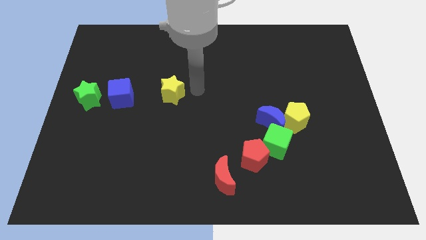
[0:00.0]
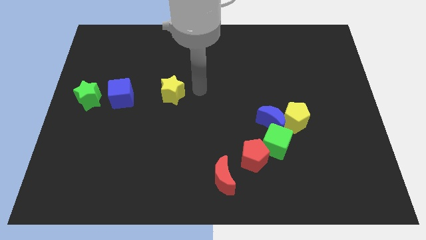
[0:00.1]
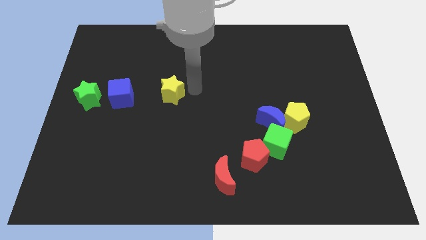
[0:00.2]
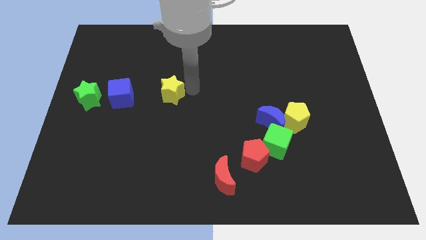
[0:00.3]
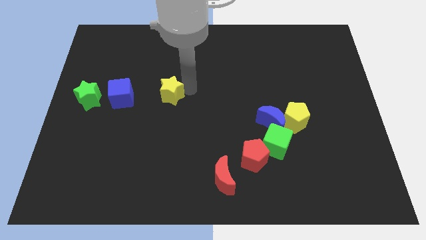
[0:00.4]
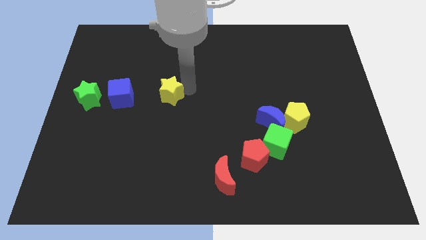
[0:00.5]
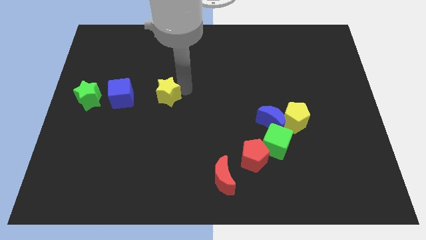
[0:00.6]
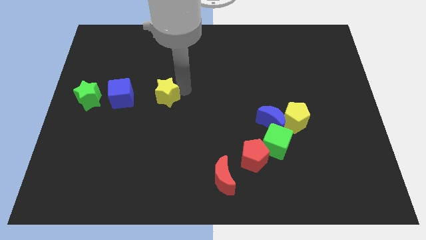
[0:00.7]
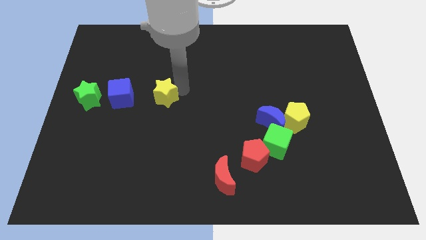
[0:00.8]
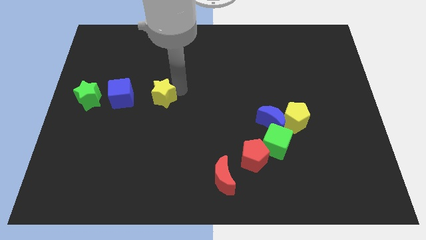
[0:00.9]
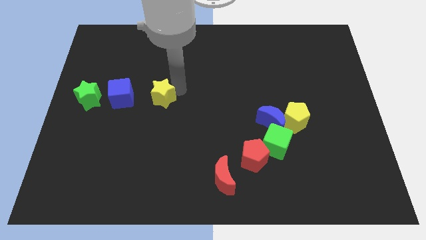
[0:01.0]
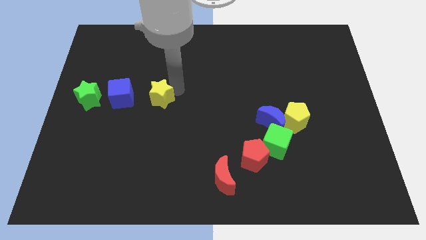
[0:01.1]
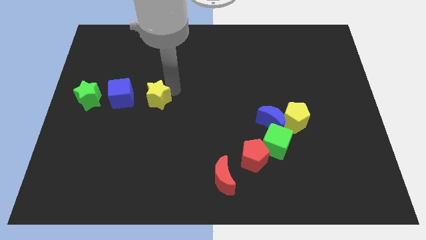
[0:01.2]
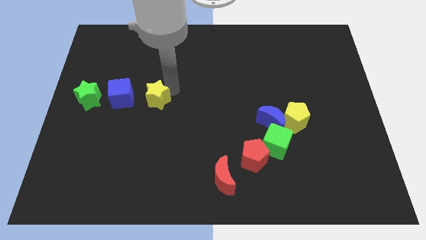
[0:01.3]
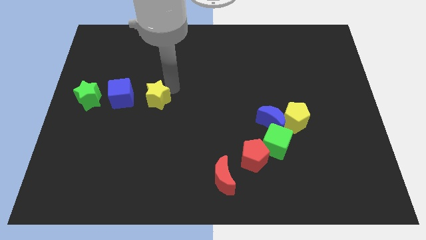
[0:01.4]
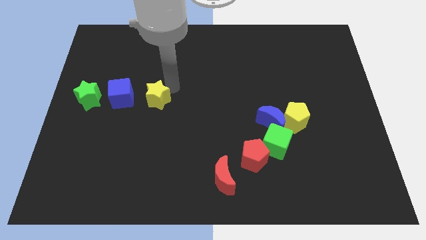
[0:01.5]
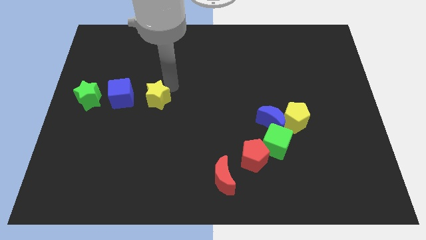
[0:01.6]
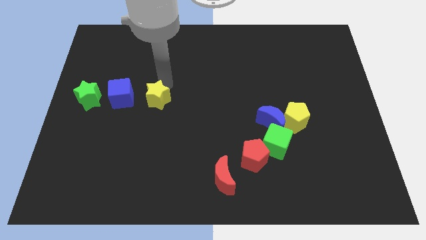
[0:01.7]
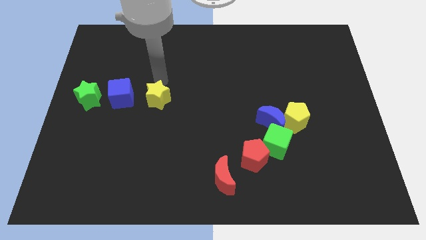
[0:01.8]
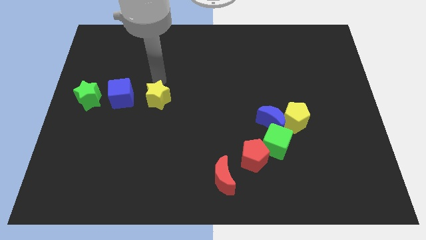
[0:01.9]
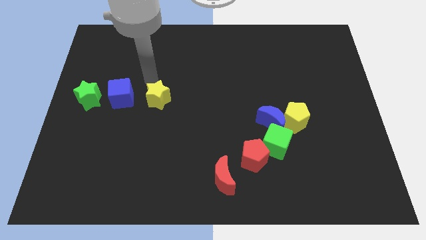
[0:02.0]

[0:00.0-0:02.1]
move the yellow star to the right side of the blue cube

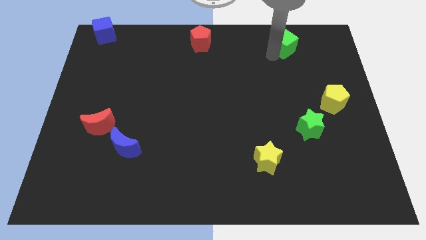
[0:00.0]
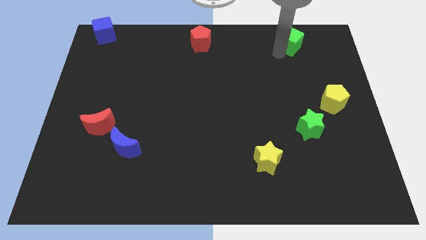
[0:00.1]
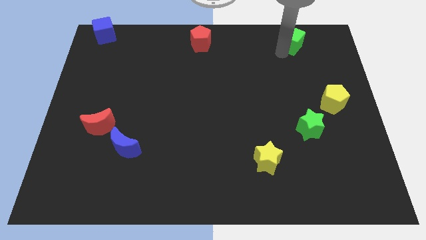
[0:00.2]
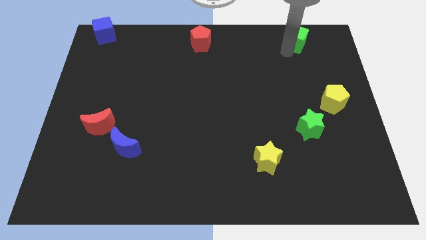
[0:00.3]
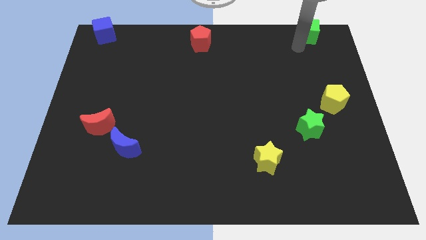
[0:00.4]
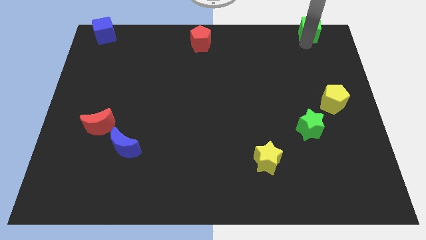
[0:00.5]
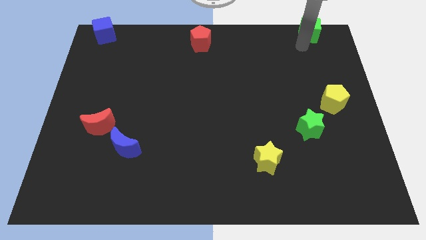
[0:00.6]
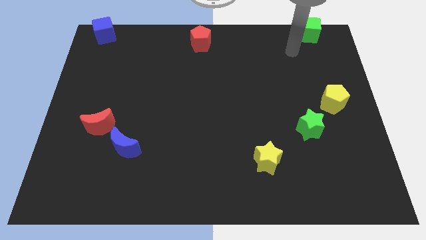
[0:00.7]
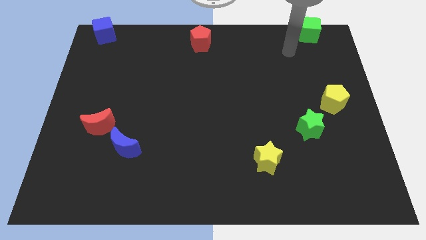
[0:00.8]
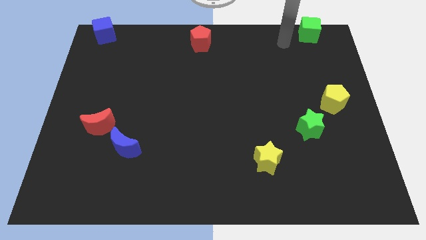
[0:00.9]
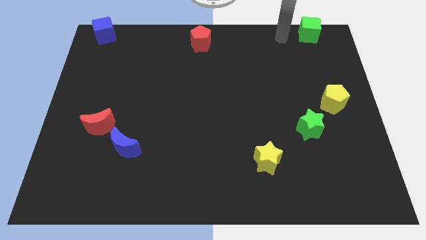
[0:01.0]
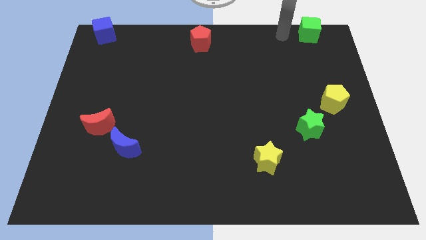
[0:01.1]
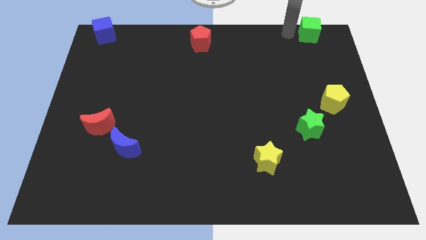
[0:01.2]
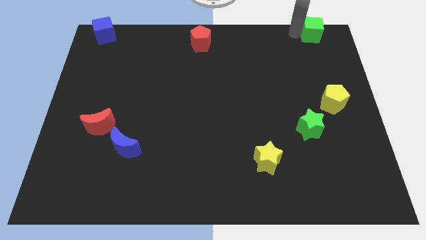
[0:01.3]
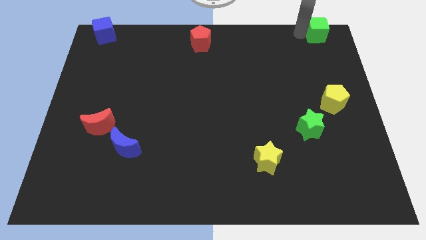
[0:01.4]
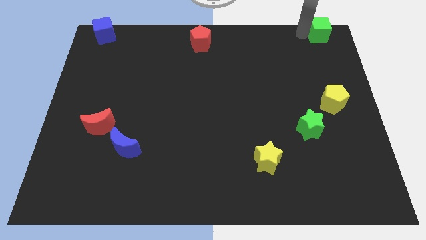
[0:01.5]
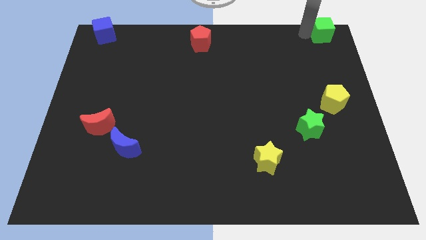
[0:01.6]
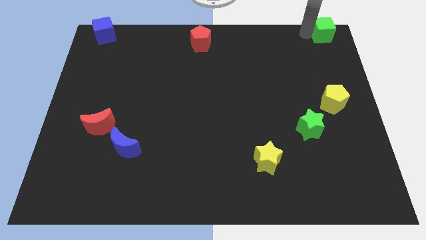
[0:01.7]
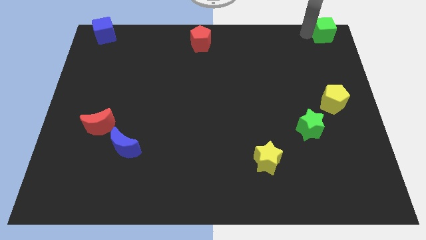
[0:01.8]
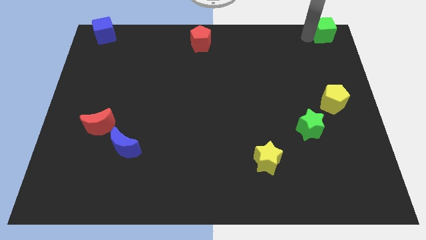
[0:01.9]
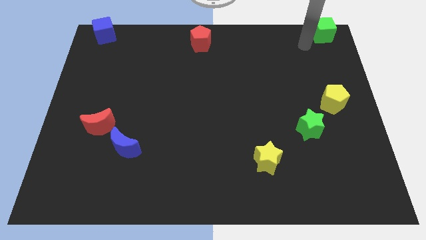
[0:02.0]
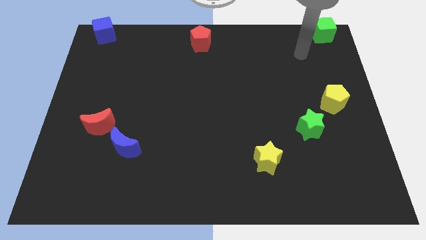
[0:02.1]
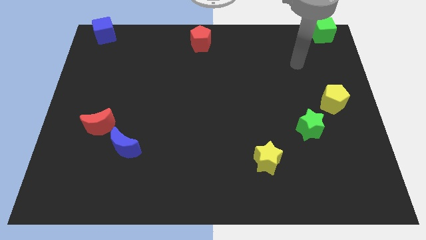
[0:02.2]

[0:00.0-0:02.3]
push the green cube to the top right of the board

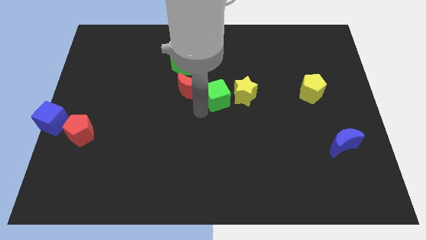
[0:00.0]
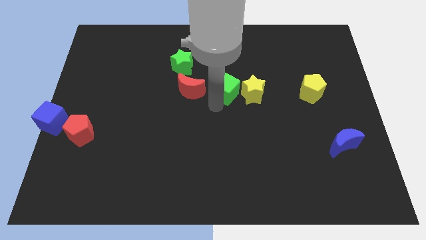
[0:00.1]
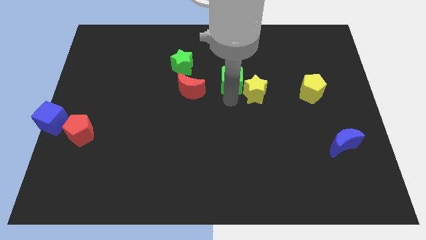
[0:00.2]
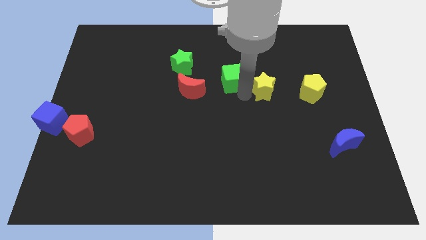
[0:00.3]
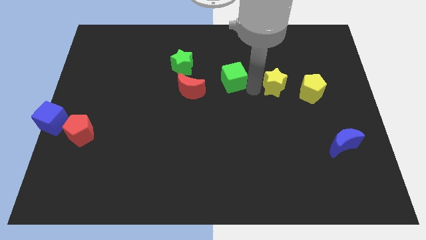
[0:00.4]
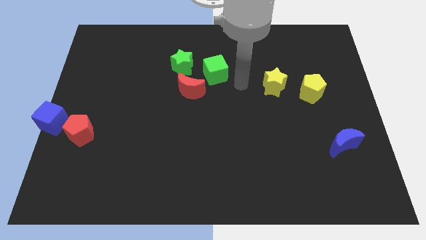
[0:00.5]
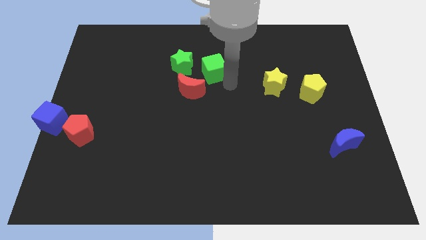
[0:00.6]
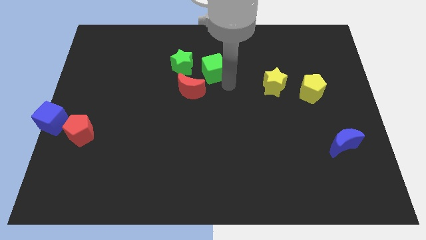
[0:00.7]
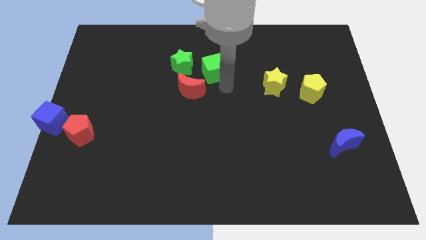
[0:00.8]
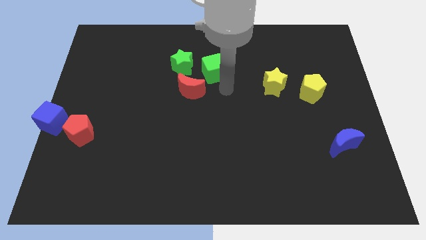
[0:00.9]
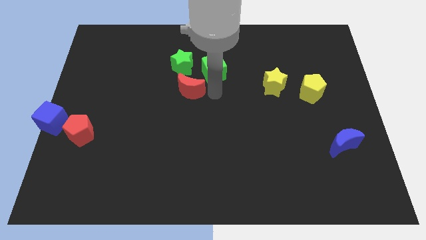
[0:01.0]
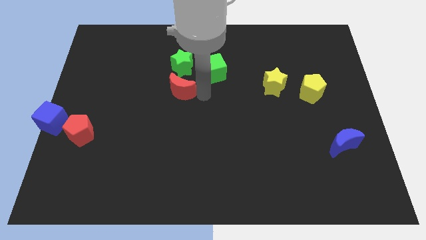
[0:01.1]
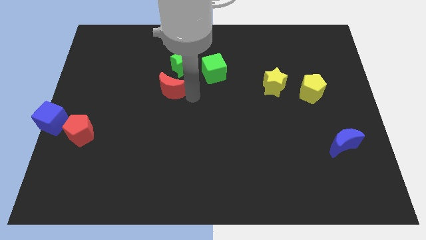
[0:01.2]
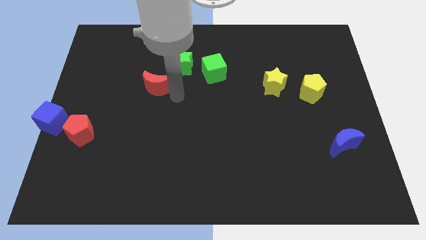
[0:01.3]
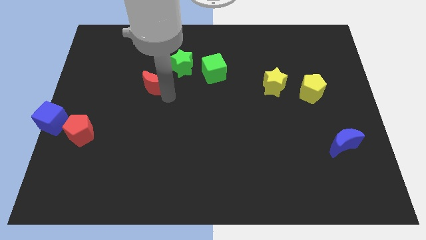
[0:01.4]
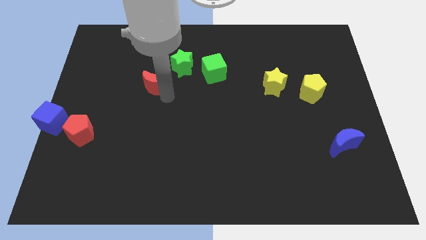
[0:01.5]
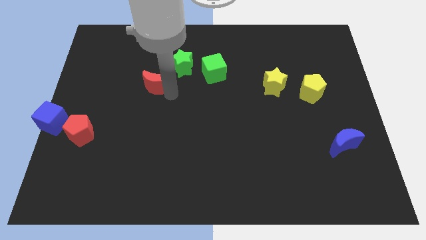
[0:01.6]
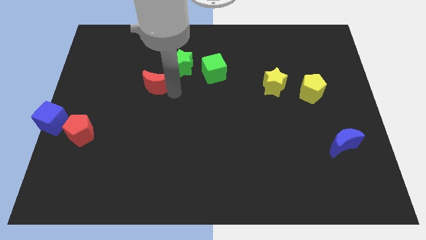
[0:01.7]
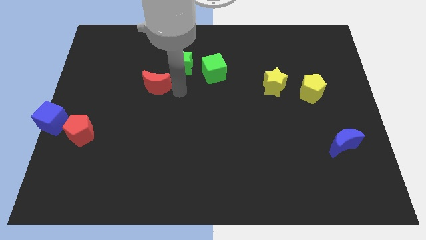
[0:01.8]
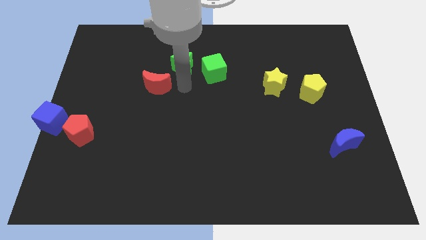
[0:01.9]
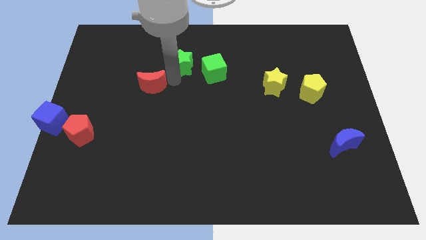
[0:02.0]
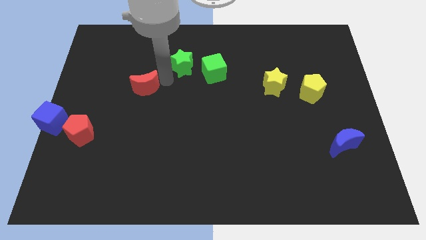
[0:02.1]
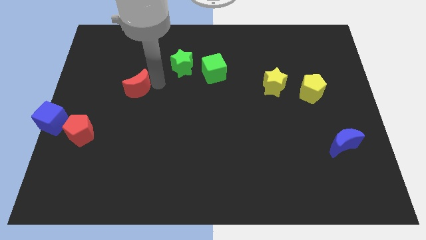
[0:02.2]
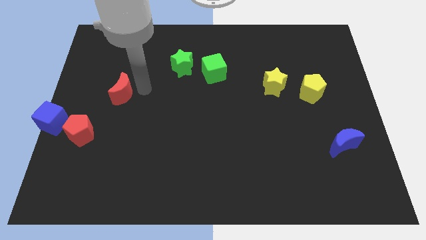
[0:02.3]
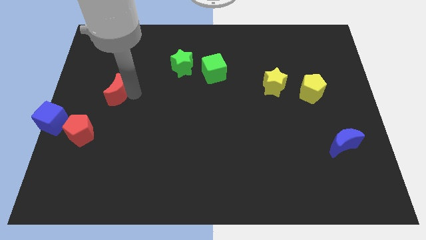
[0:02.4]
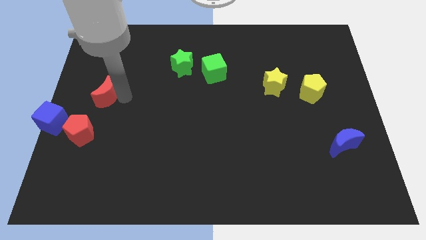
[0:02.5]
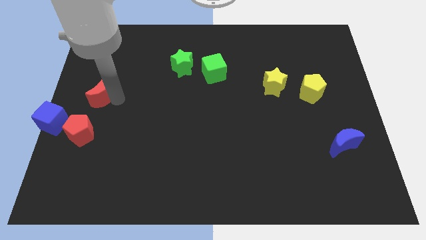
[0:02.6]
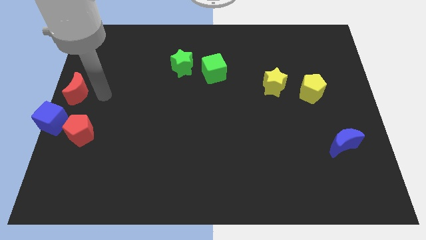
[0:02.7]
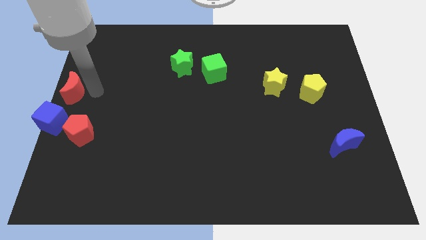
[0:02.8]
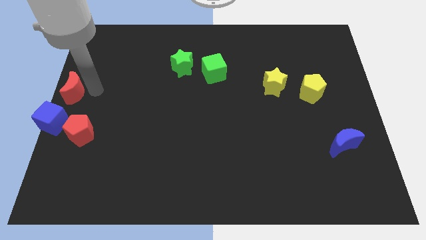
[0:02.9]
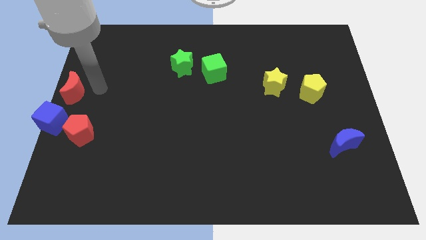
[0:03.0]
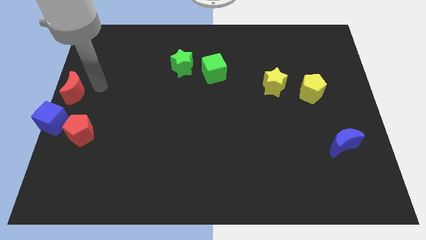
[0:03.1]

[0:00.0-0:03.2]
place the red moon above the blue cube

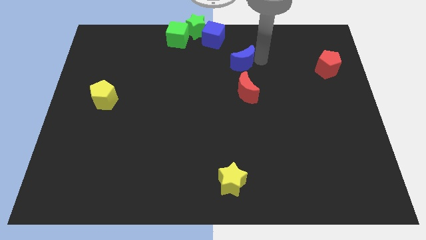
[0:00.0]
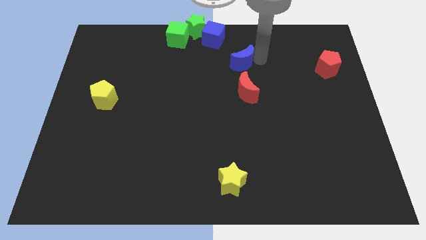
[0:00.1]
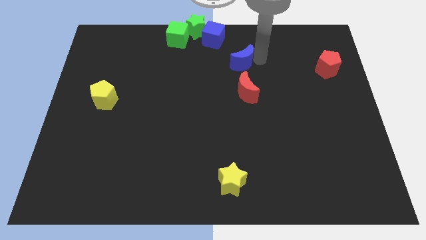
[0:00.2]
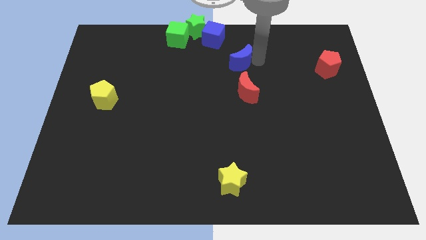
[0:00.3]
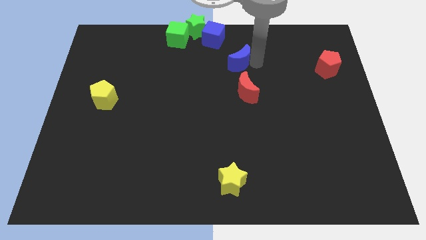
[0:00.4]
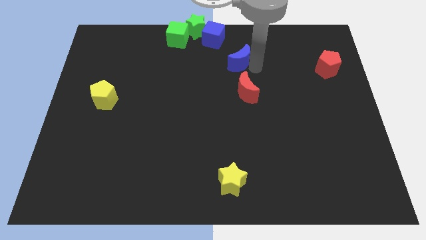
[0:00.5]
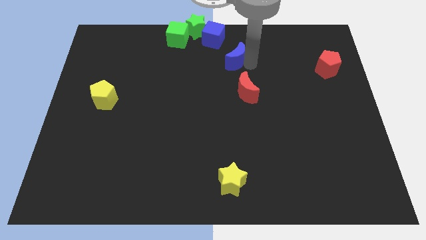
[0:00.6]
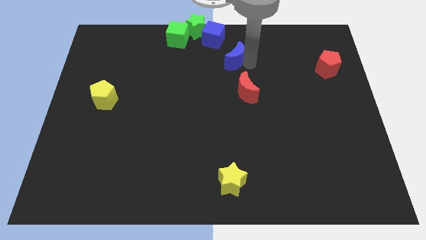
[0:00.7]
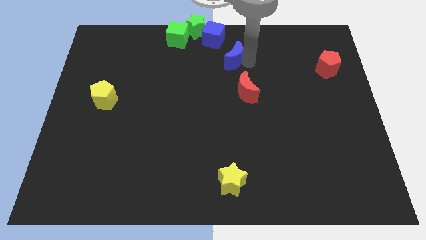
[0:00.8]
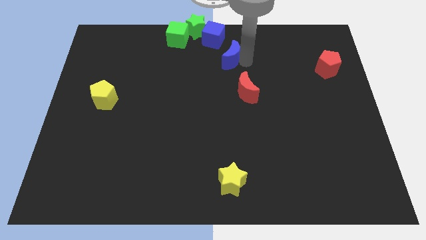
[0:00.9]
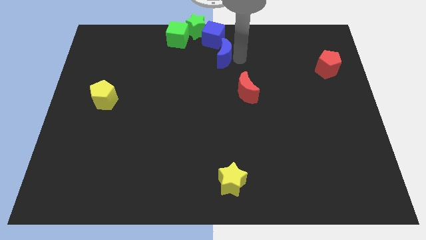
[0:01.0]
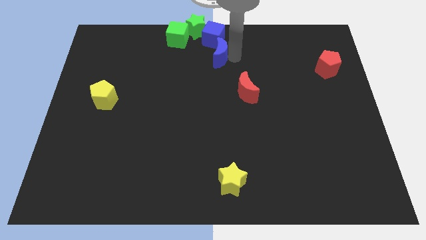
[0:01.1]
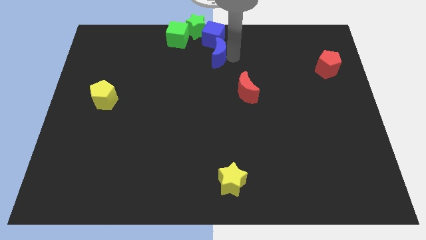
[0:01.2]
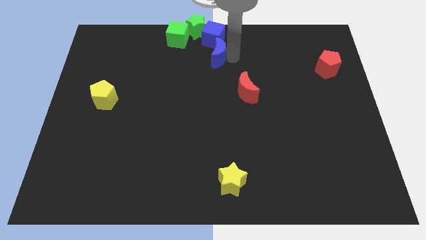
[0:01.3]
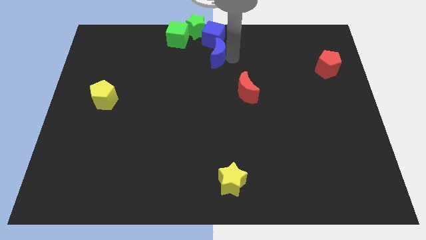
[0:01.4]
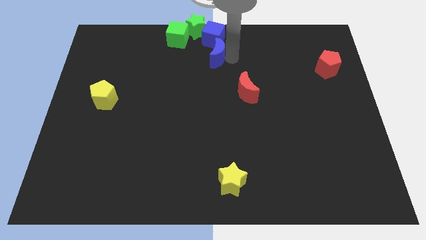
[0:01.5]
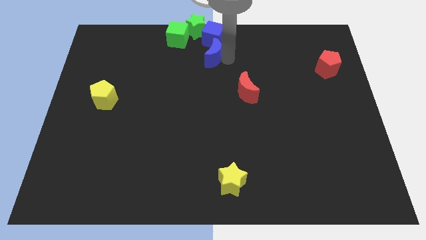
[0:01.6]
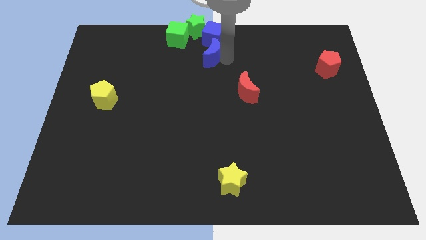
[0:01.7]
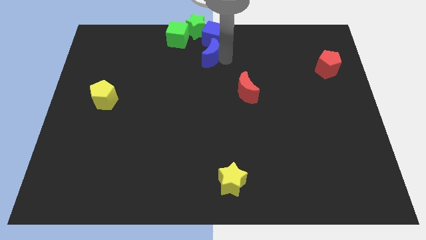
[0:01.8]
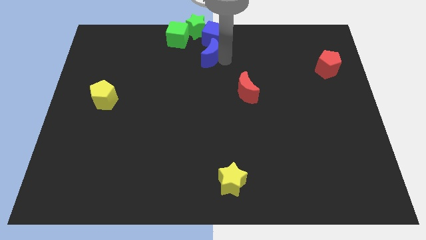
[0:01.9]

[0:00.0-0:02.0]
place the blue moon diagonally top left to the red moon
